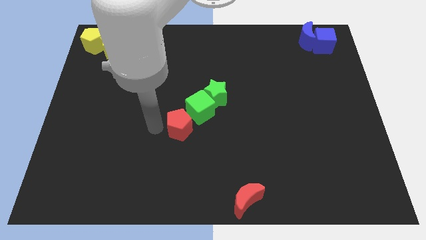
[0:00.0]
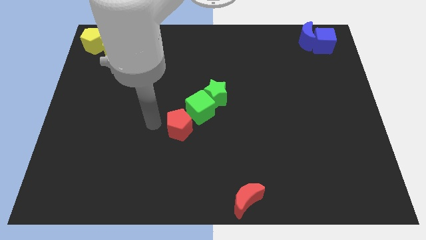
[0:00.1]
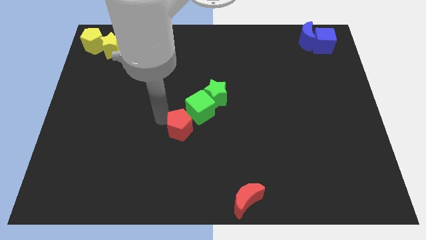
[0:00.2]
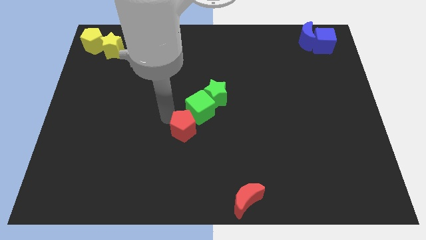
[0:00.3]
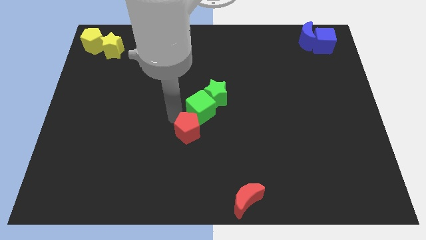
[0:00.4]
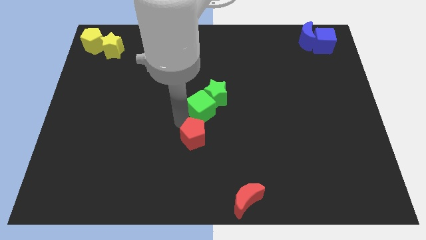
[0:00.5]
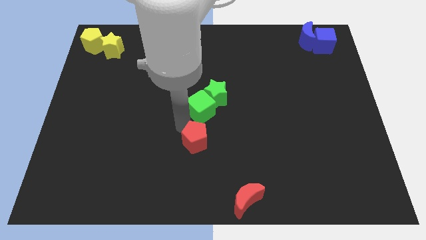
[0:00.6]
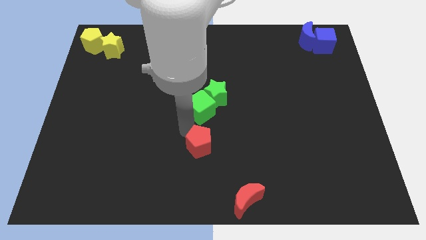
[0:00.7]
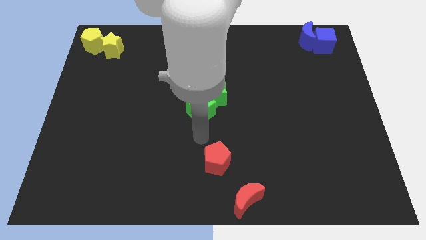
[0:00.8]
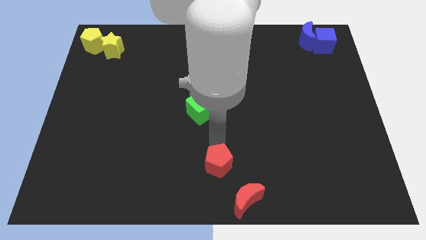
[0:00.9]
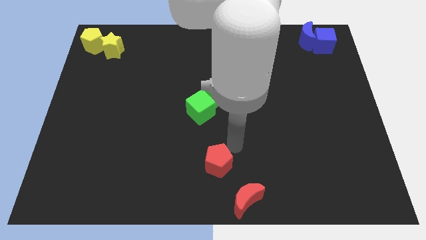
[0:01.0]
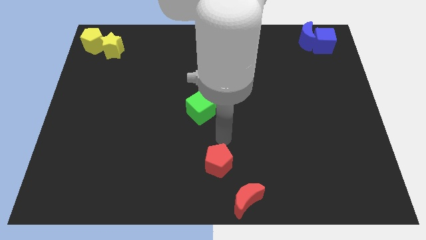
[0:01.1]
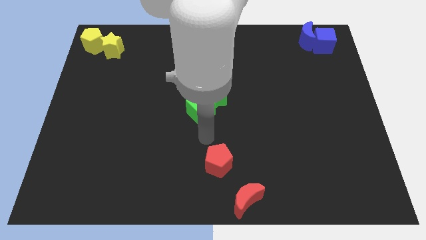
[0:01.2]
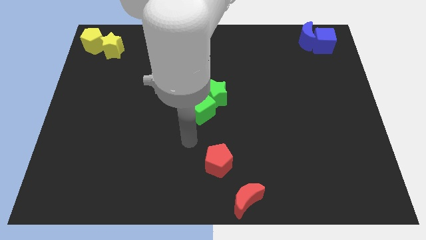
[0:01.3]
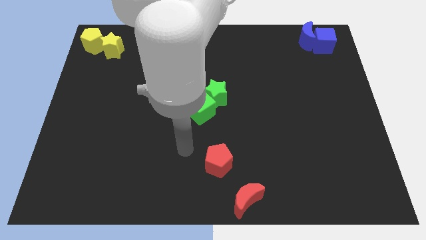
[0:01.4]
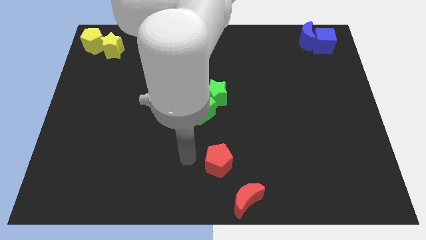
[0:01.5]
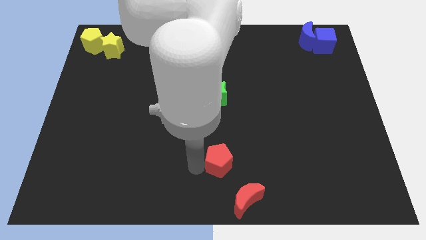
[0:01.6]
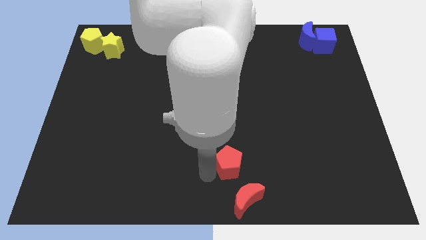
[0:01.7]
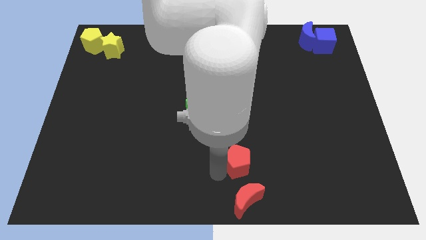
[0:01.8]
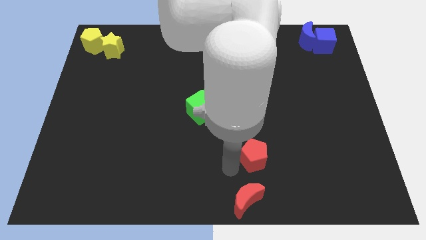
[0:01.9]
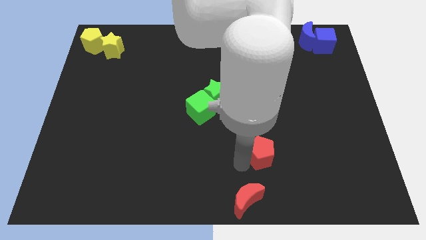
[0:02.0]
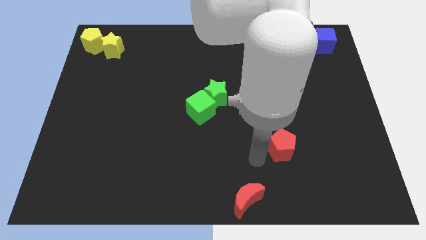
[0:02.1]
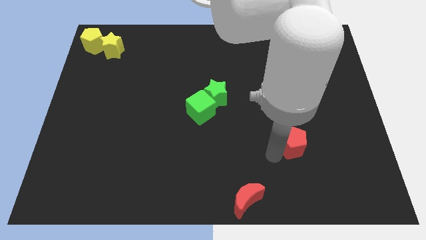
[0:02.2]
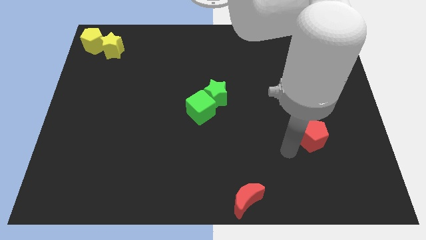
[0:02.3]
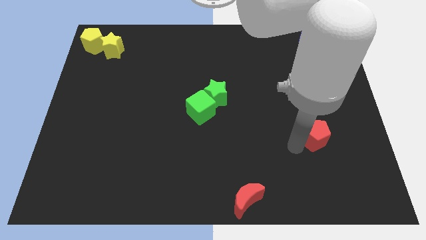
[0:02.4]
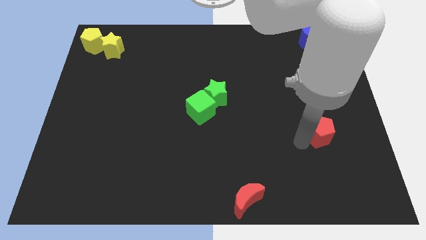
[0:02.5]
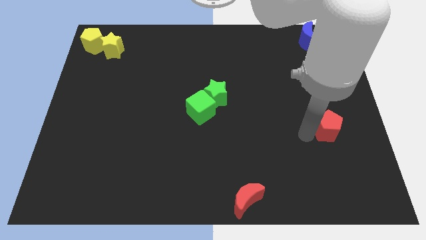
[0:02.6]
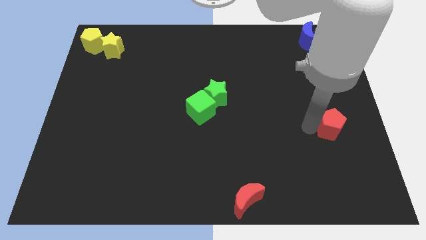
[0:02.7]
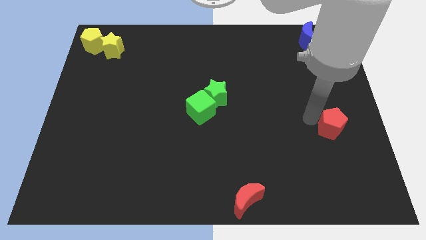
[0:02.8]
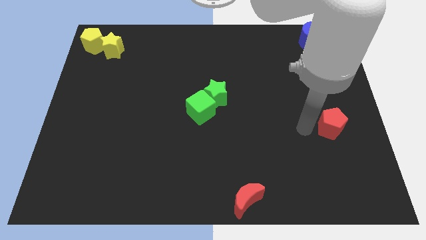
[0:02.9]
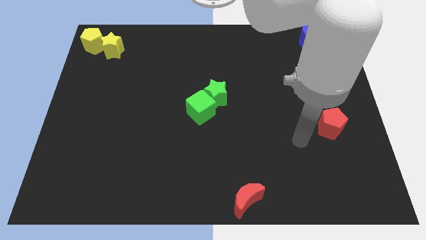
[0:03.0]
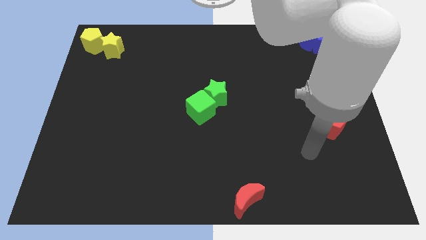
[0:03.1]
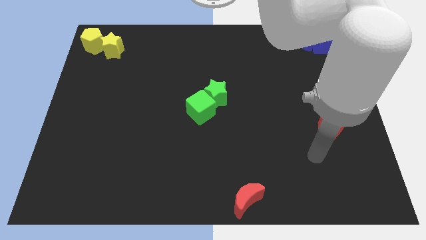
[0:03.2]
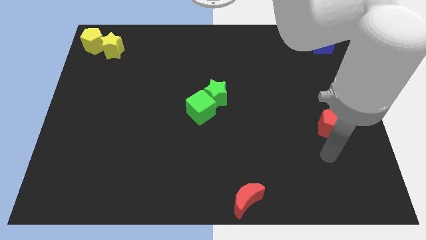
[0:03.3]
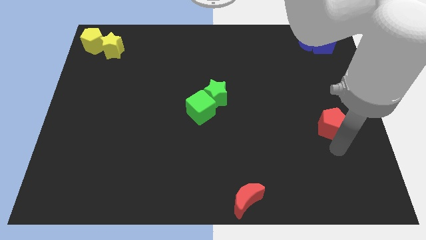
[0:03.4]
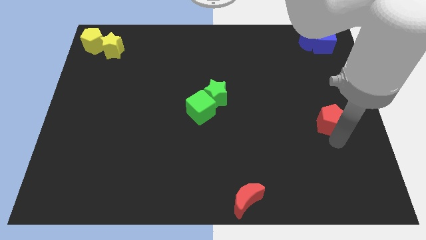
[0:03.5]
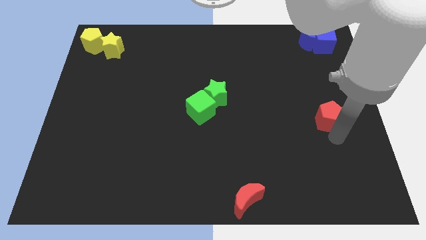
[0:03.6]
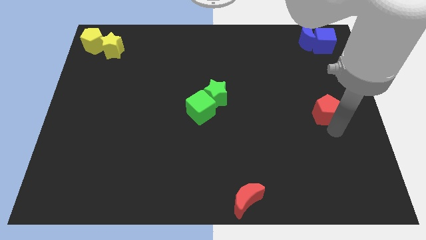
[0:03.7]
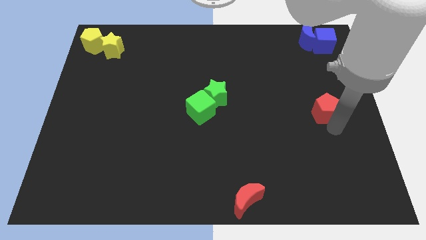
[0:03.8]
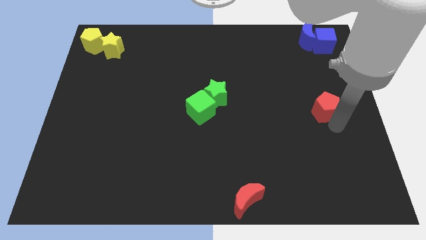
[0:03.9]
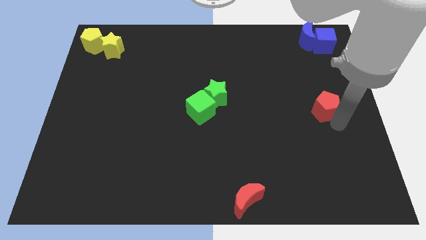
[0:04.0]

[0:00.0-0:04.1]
move red pentagon to the right side of the board

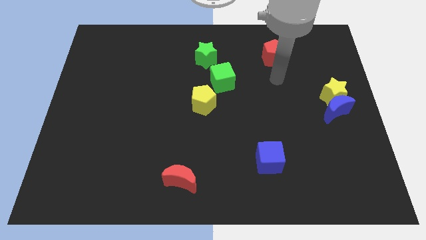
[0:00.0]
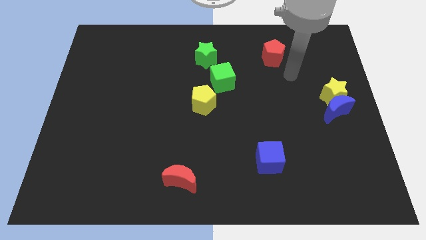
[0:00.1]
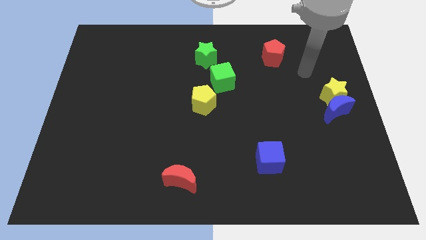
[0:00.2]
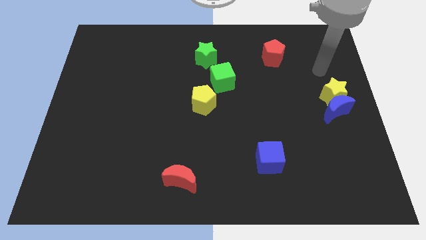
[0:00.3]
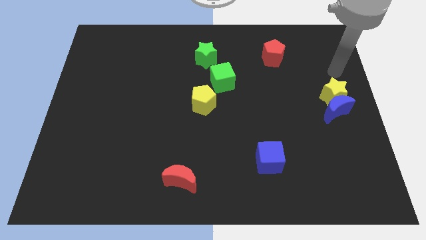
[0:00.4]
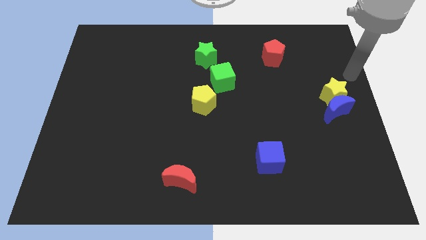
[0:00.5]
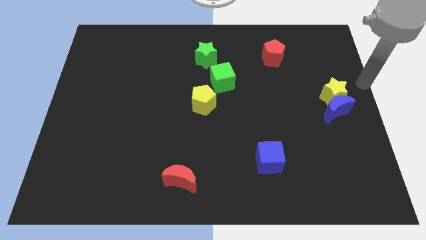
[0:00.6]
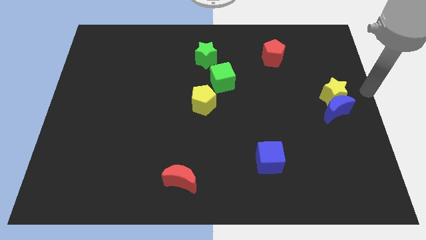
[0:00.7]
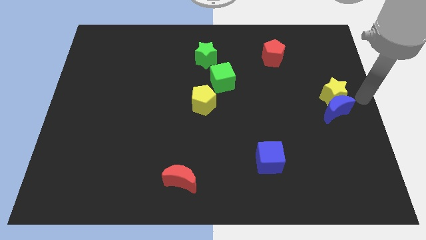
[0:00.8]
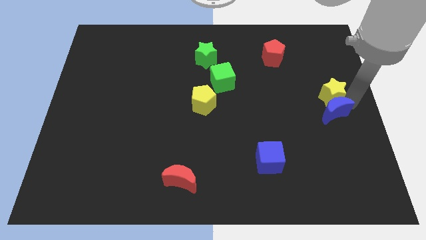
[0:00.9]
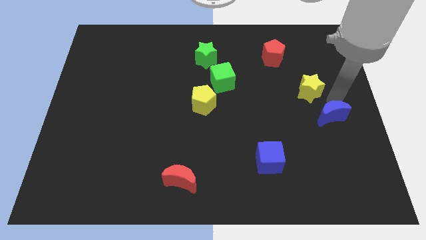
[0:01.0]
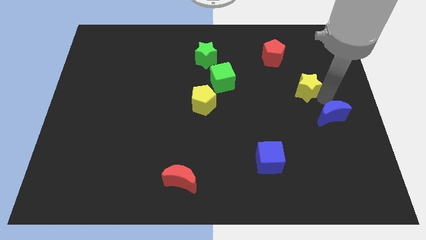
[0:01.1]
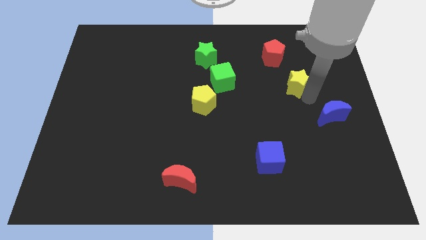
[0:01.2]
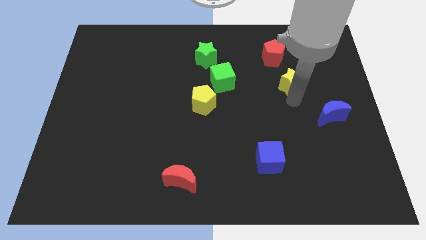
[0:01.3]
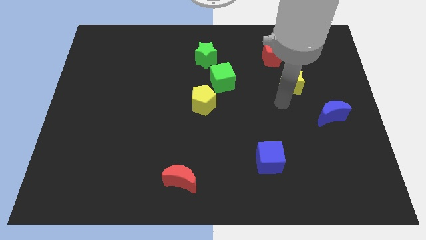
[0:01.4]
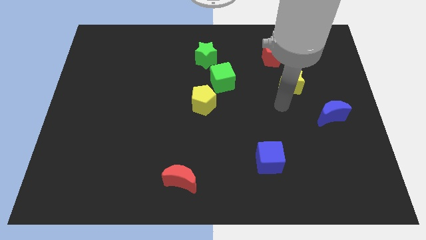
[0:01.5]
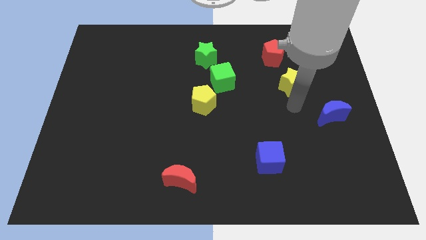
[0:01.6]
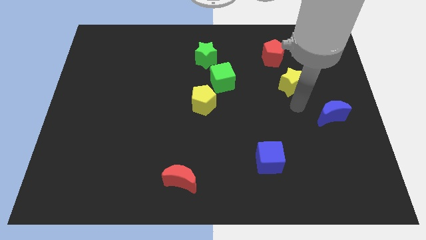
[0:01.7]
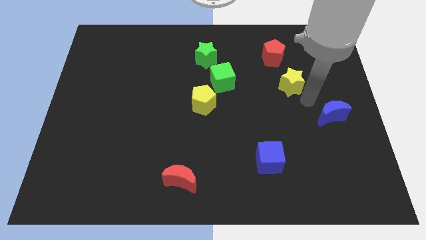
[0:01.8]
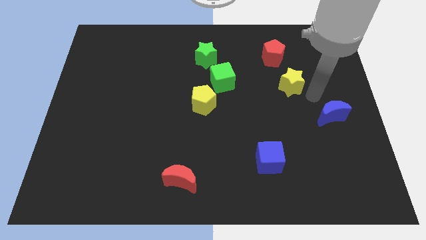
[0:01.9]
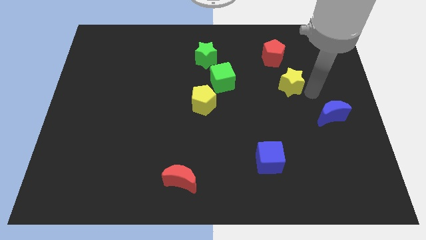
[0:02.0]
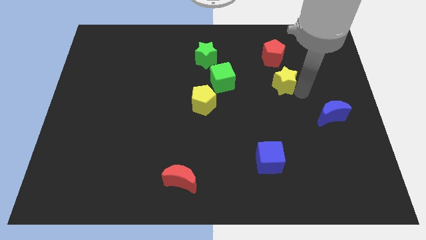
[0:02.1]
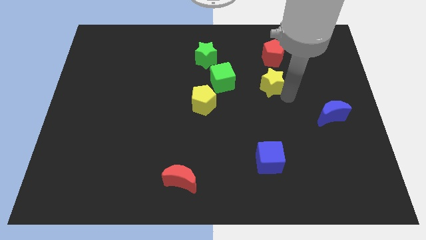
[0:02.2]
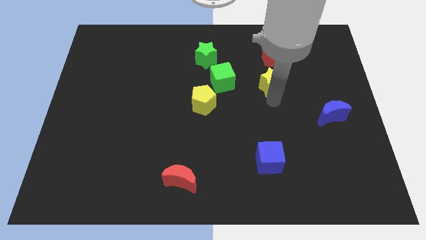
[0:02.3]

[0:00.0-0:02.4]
separate the yellow star from the blue moon

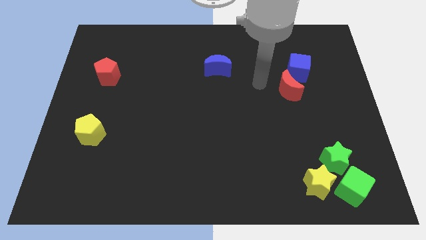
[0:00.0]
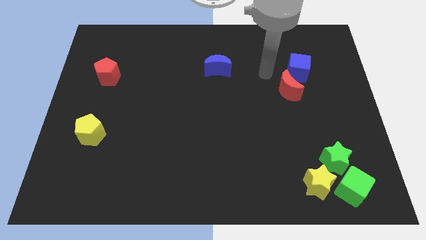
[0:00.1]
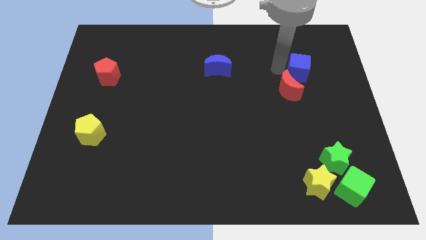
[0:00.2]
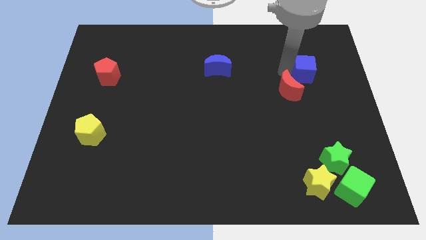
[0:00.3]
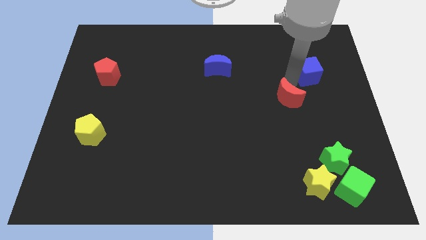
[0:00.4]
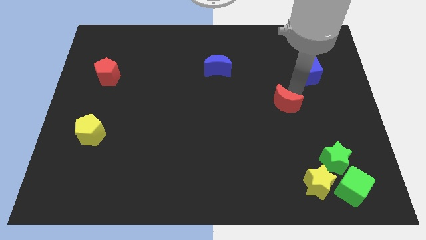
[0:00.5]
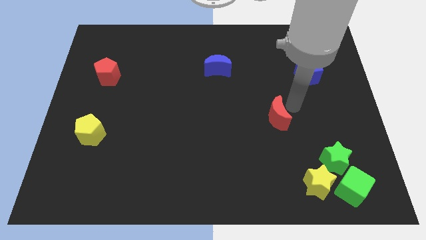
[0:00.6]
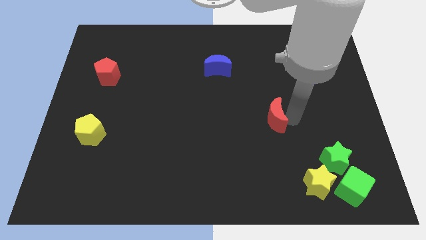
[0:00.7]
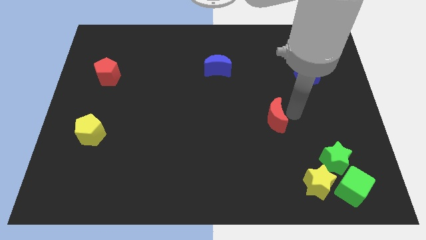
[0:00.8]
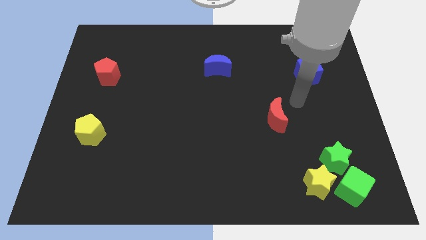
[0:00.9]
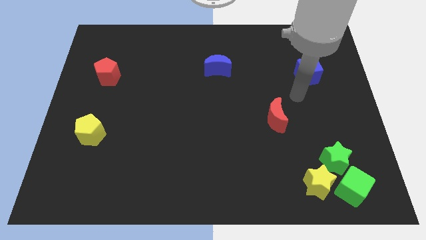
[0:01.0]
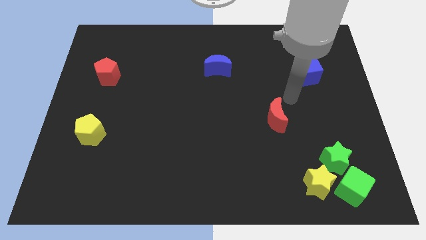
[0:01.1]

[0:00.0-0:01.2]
push the red crescent away from the blue cube

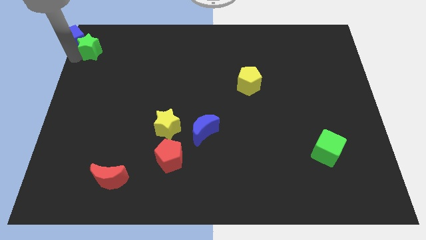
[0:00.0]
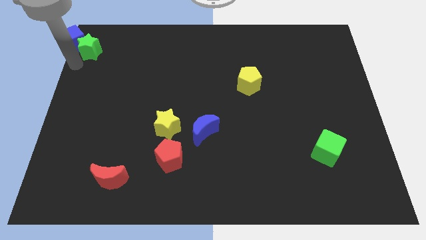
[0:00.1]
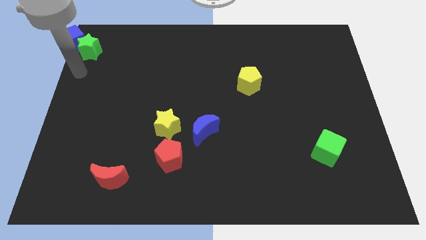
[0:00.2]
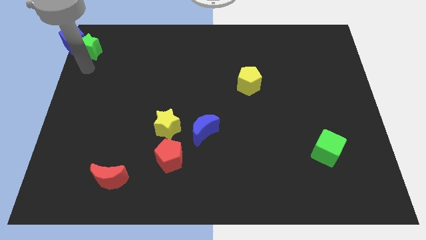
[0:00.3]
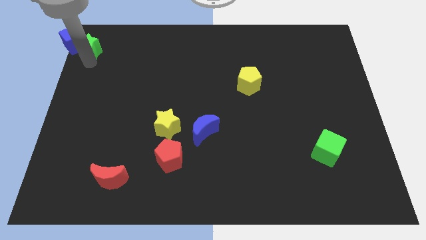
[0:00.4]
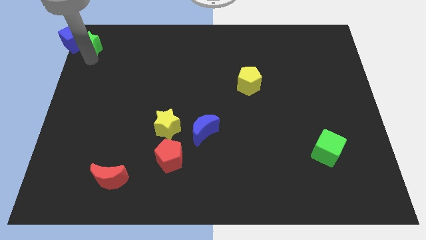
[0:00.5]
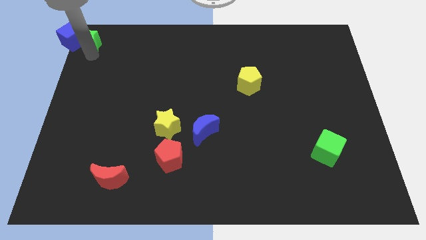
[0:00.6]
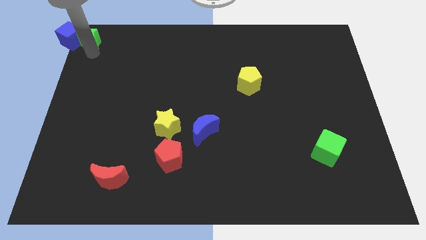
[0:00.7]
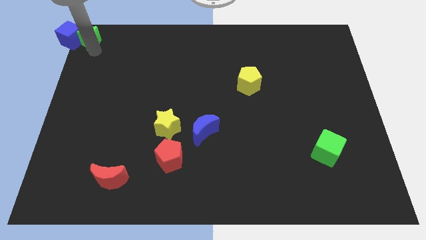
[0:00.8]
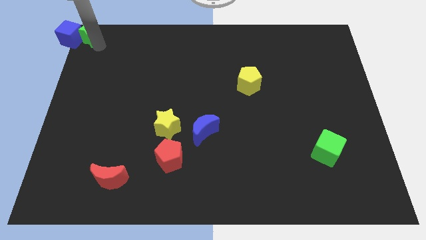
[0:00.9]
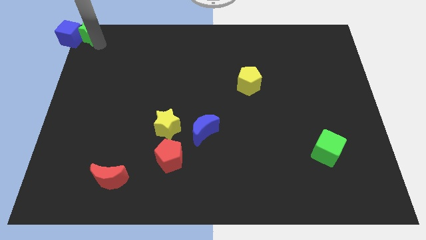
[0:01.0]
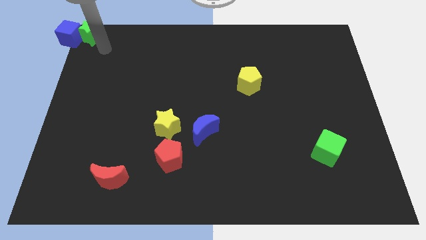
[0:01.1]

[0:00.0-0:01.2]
move the green star to the right of the blue cube

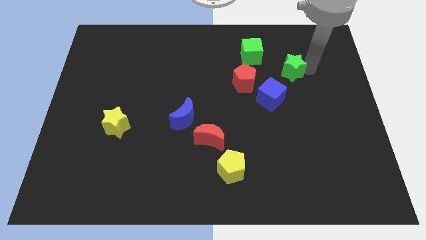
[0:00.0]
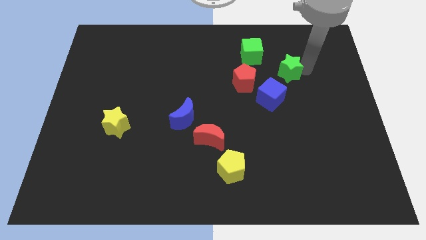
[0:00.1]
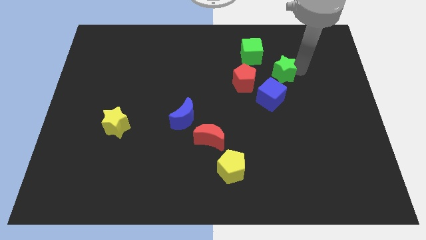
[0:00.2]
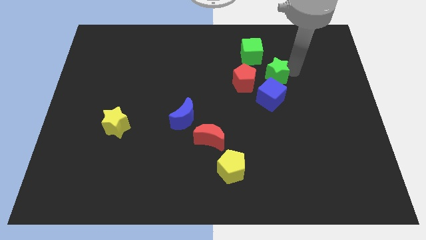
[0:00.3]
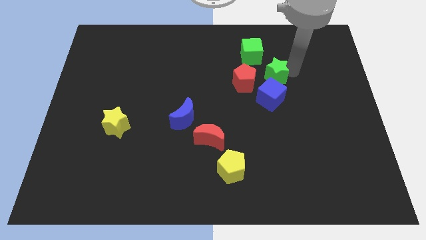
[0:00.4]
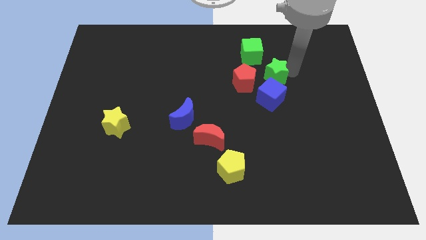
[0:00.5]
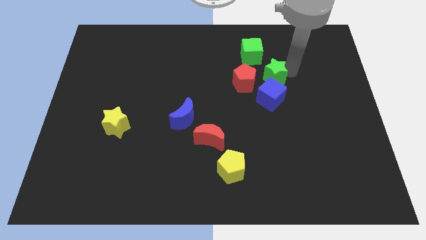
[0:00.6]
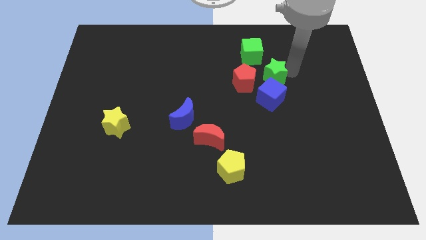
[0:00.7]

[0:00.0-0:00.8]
move the green star above the blue cube
